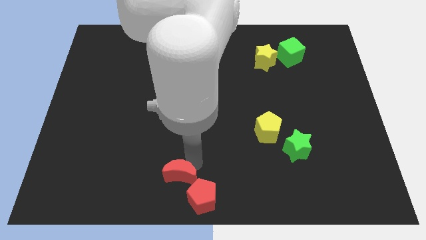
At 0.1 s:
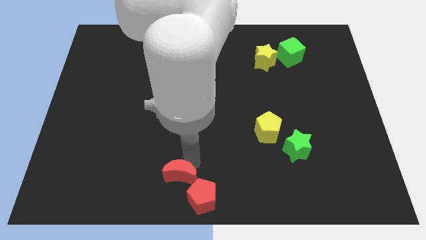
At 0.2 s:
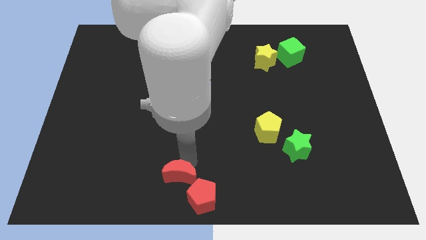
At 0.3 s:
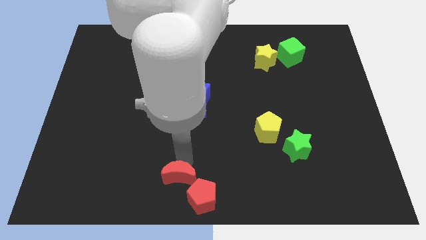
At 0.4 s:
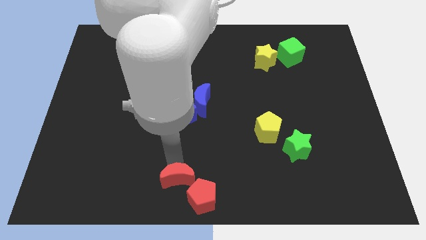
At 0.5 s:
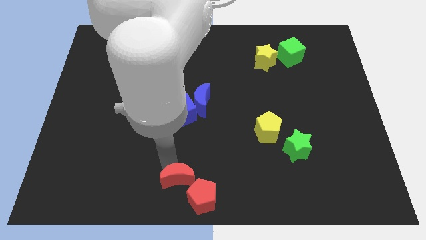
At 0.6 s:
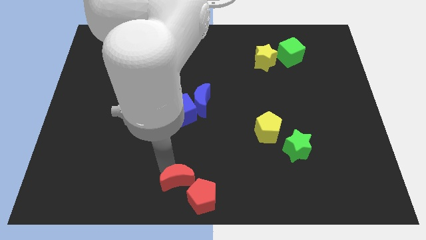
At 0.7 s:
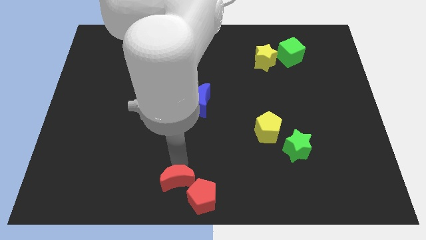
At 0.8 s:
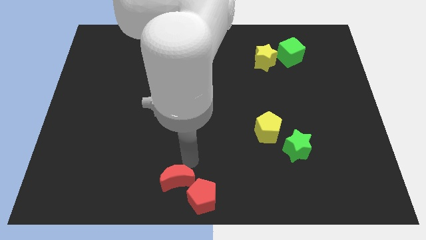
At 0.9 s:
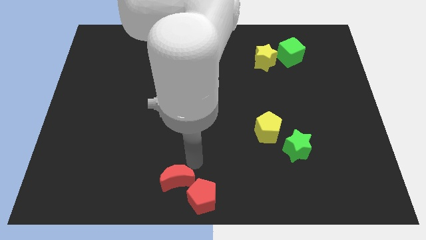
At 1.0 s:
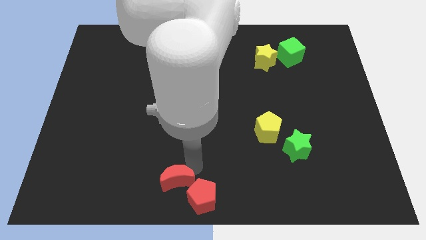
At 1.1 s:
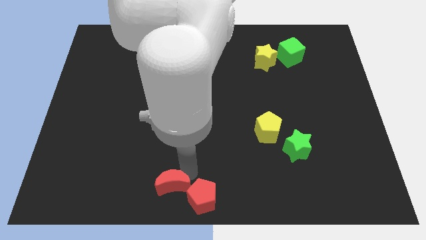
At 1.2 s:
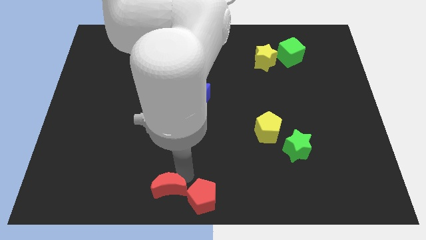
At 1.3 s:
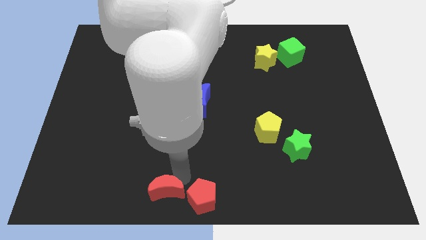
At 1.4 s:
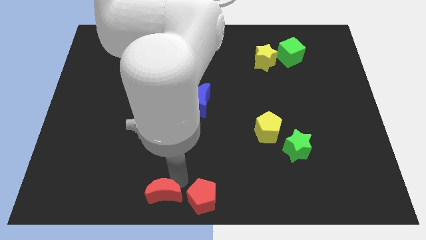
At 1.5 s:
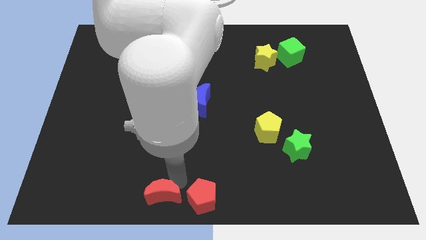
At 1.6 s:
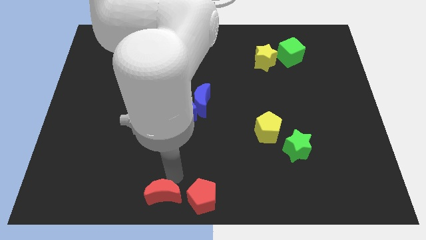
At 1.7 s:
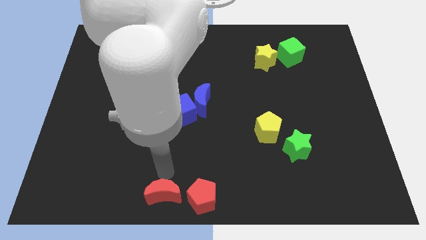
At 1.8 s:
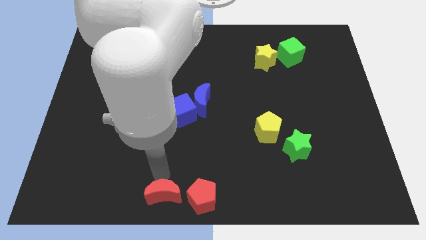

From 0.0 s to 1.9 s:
move red crescent to the left of red pentagon

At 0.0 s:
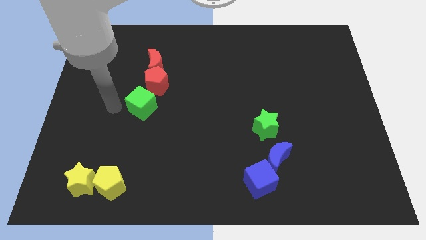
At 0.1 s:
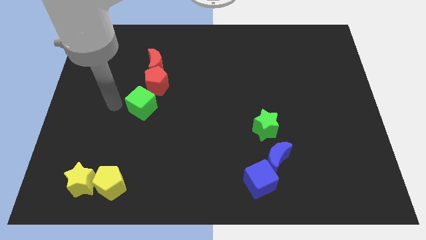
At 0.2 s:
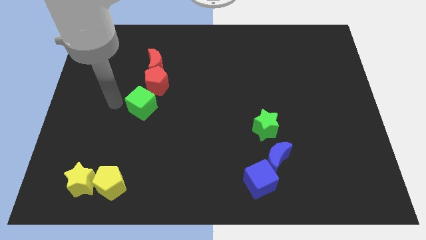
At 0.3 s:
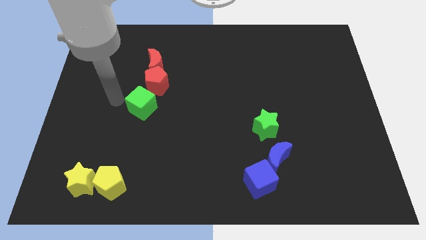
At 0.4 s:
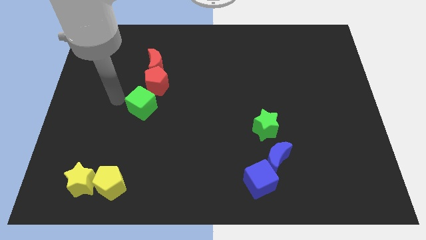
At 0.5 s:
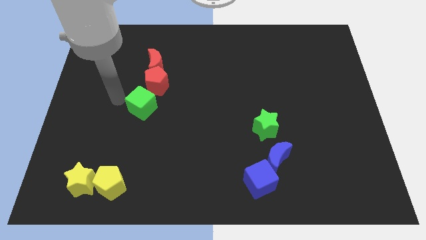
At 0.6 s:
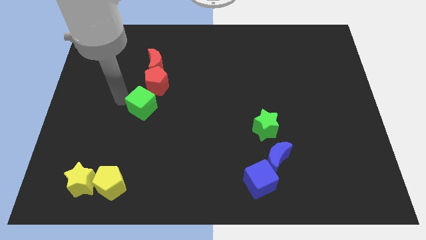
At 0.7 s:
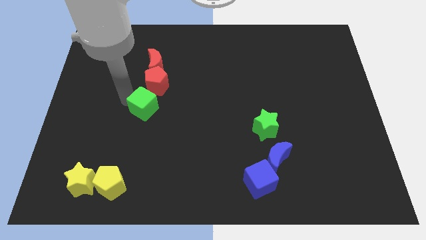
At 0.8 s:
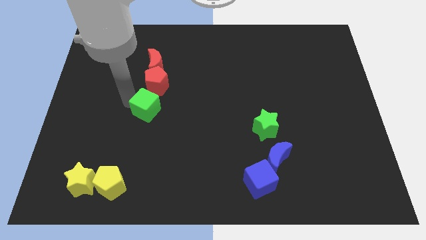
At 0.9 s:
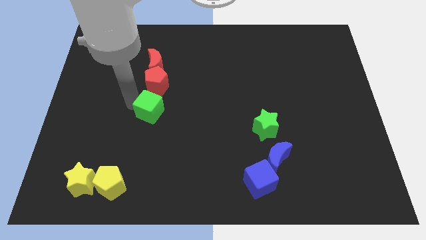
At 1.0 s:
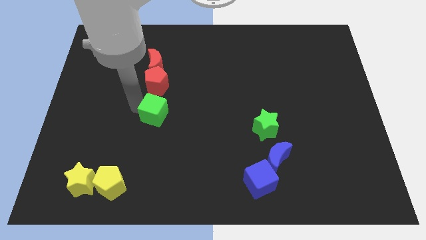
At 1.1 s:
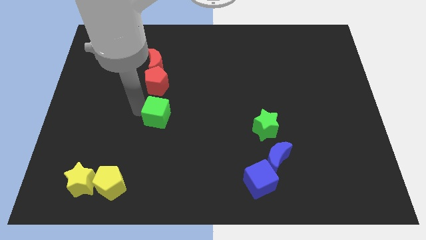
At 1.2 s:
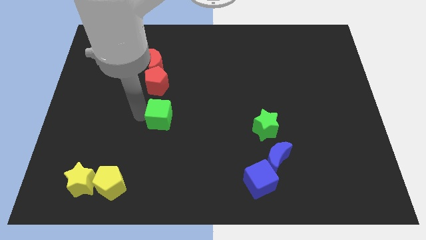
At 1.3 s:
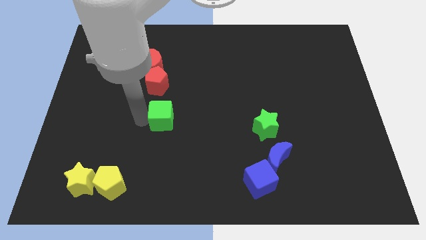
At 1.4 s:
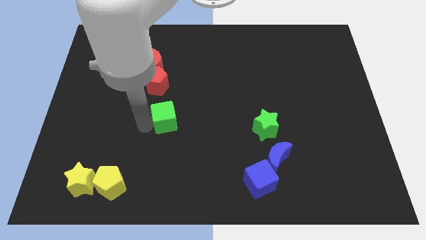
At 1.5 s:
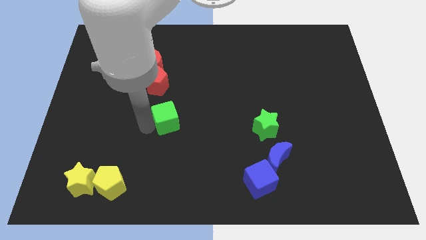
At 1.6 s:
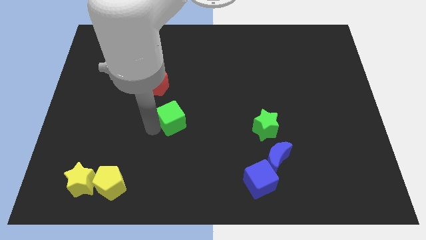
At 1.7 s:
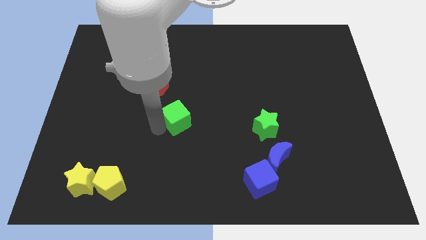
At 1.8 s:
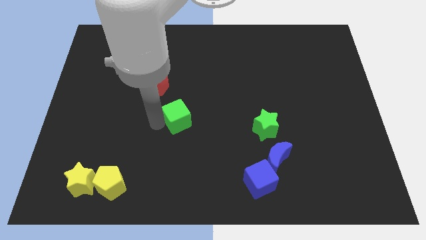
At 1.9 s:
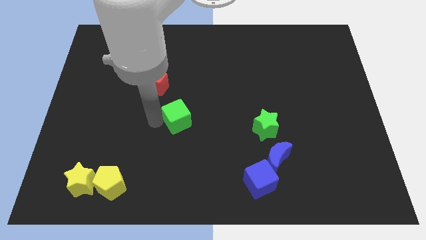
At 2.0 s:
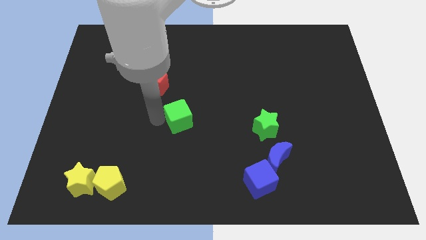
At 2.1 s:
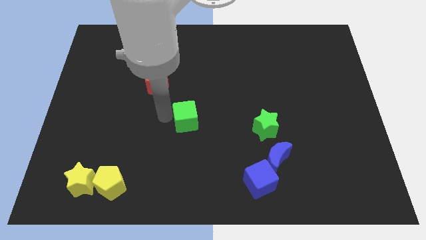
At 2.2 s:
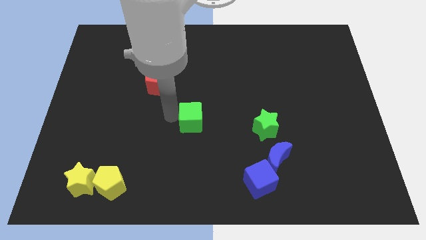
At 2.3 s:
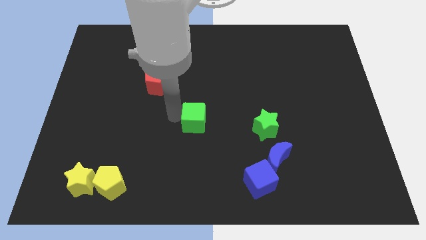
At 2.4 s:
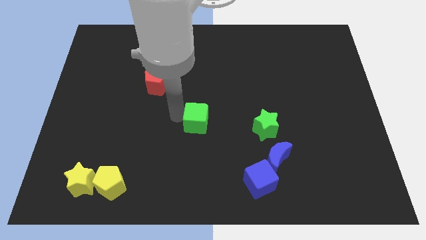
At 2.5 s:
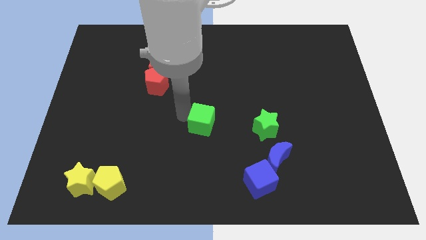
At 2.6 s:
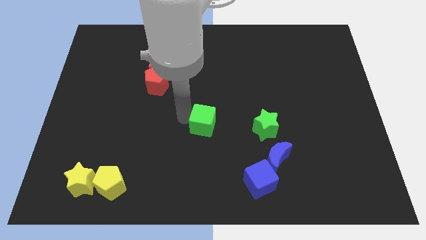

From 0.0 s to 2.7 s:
move the green cube to the center

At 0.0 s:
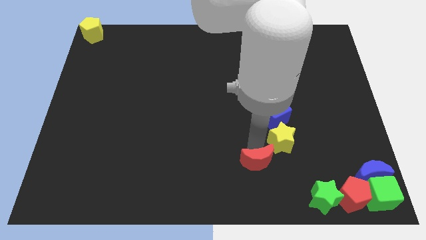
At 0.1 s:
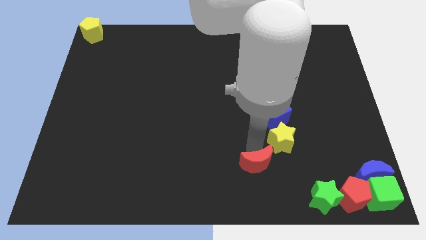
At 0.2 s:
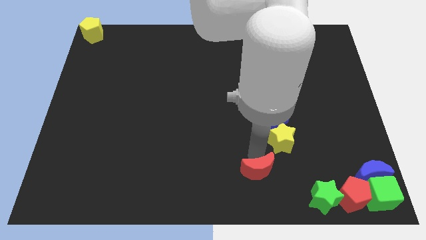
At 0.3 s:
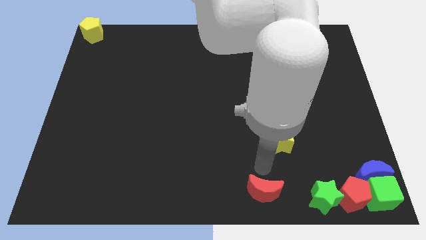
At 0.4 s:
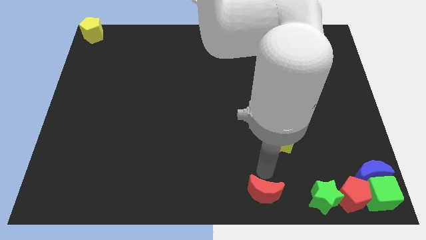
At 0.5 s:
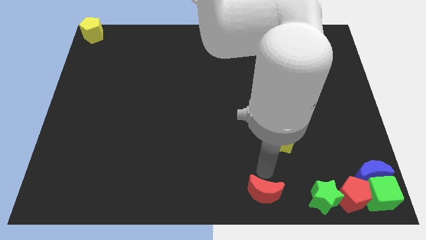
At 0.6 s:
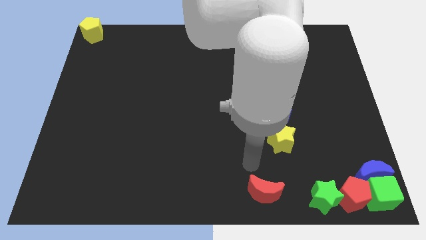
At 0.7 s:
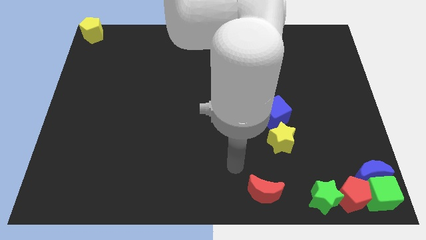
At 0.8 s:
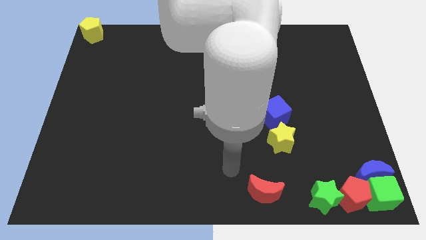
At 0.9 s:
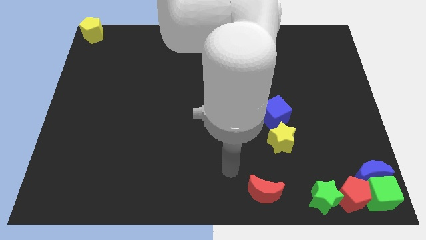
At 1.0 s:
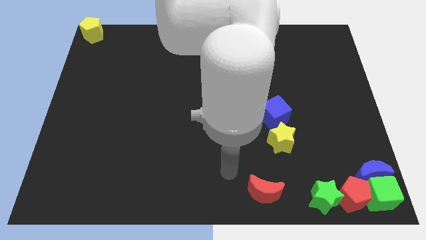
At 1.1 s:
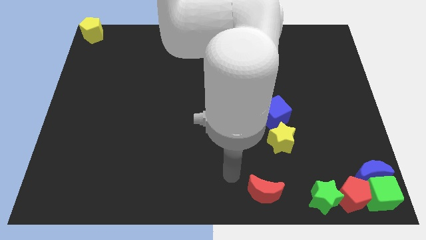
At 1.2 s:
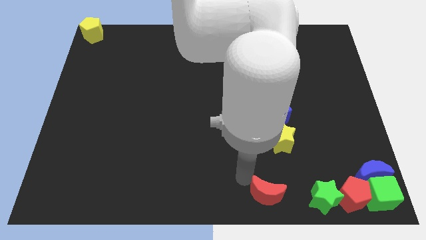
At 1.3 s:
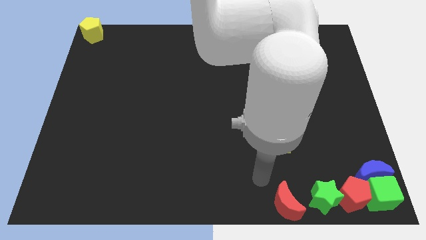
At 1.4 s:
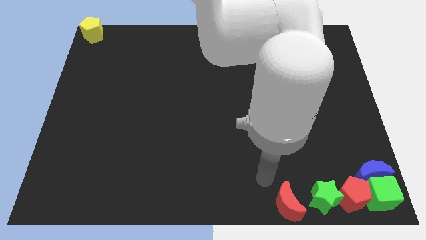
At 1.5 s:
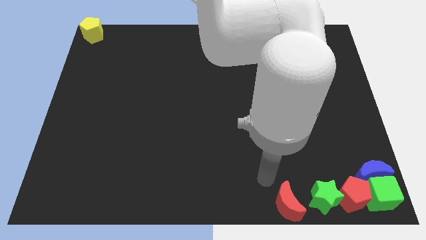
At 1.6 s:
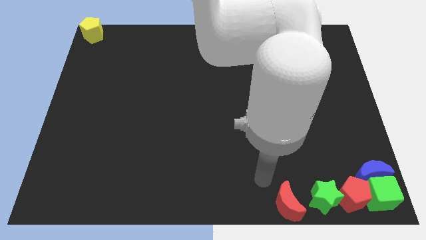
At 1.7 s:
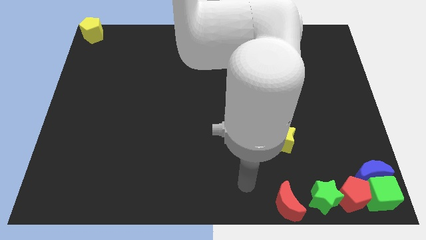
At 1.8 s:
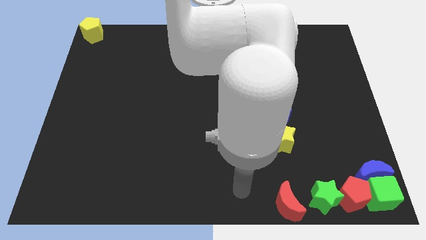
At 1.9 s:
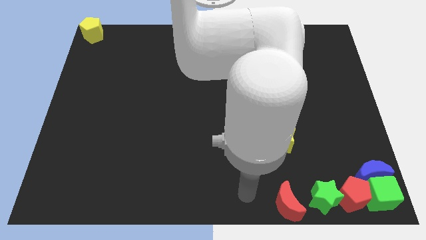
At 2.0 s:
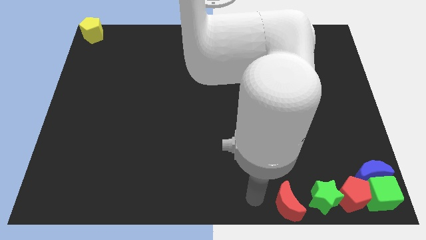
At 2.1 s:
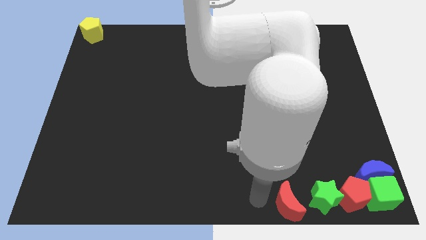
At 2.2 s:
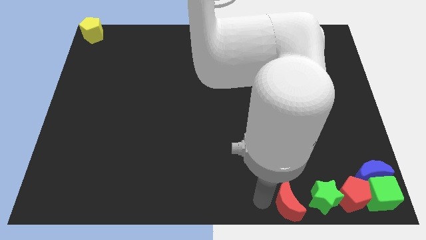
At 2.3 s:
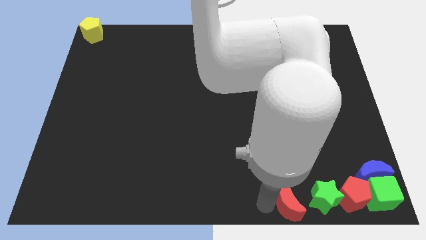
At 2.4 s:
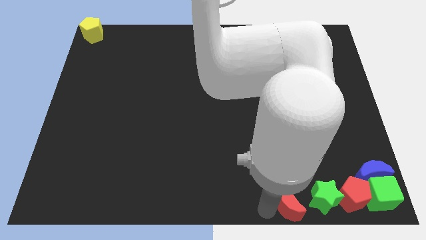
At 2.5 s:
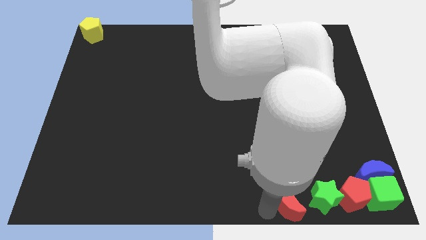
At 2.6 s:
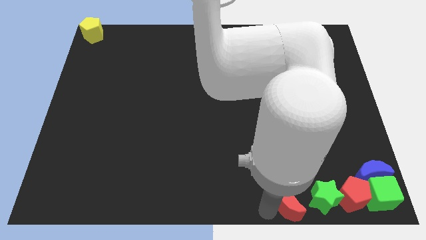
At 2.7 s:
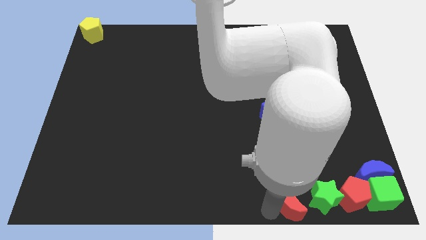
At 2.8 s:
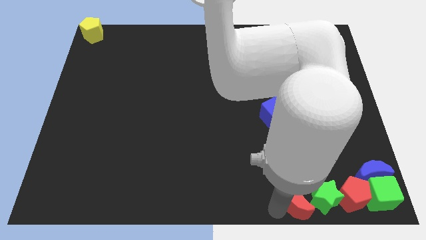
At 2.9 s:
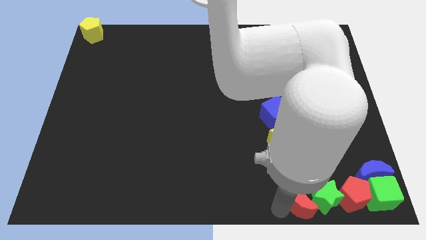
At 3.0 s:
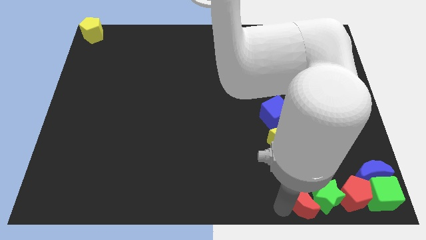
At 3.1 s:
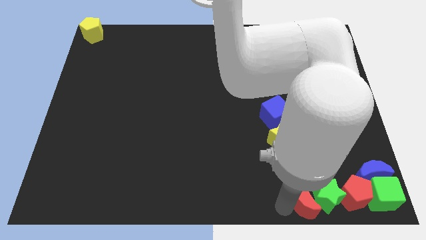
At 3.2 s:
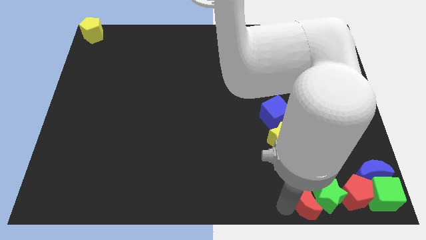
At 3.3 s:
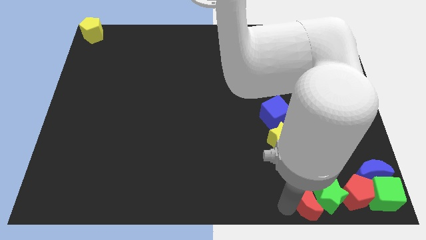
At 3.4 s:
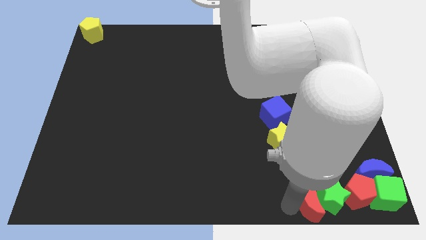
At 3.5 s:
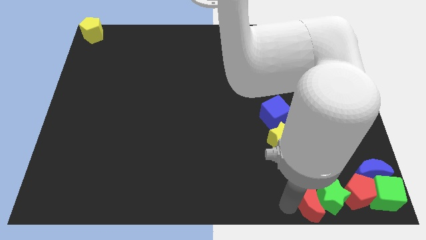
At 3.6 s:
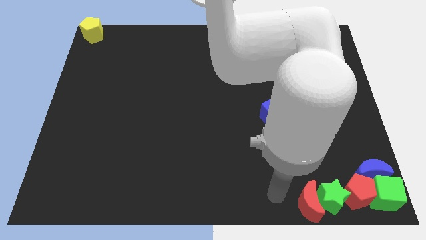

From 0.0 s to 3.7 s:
push red moon in to green star

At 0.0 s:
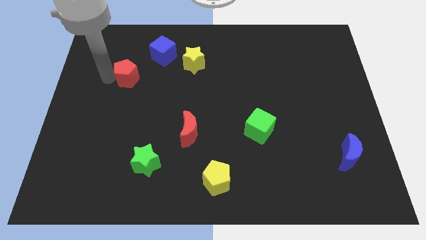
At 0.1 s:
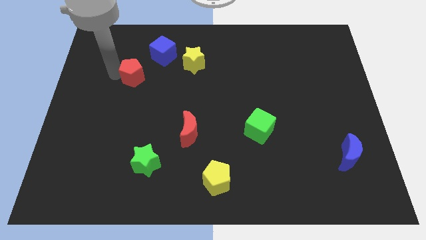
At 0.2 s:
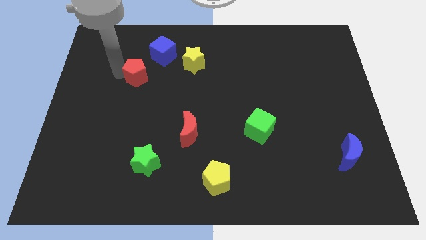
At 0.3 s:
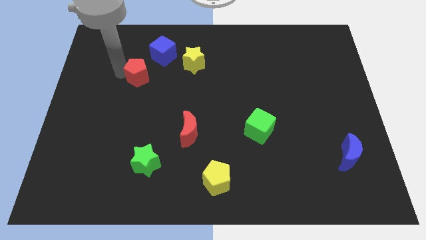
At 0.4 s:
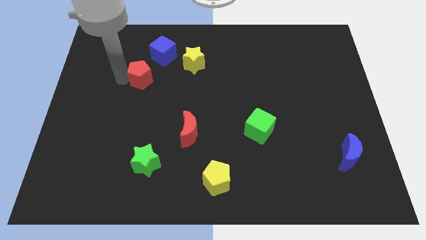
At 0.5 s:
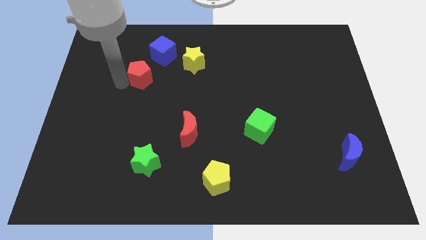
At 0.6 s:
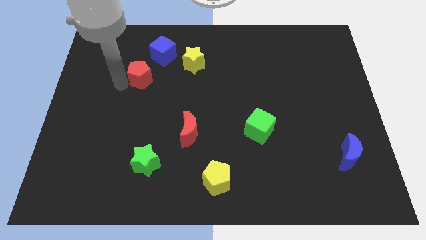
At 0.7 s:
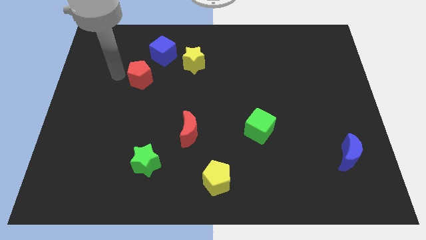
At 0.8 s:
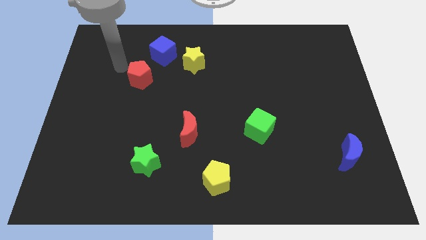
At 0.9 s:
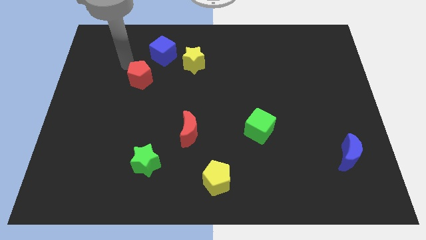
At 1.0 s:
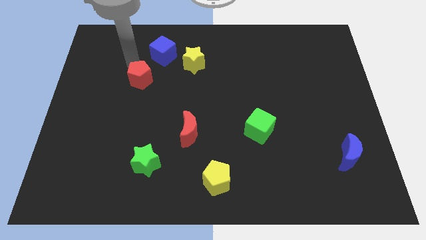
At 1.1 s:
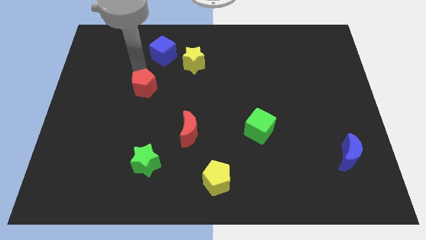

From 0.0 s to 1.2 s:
place red pentagon below blue cube
